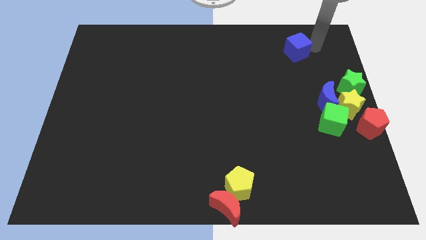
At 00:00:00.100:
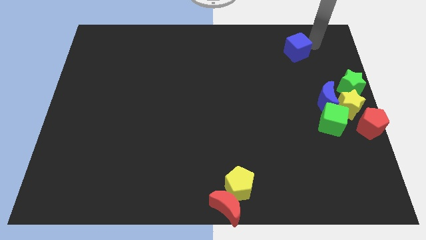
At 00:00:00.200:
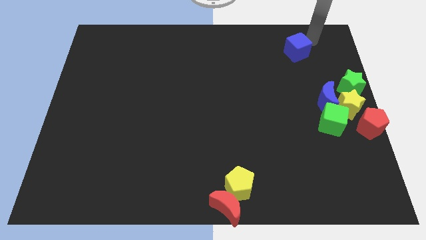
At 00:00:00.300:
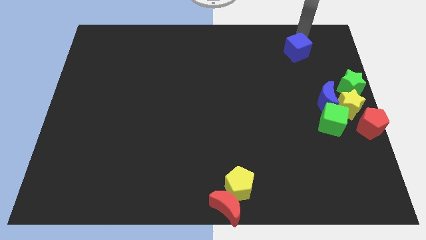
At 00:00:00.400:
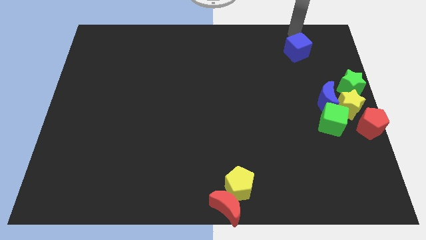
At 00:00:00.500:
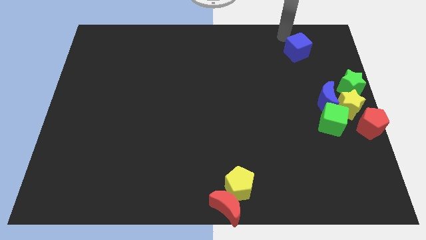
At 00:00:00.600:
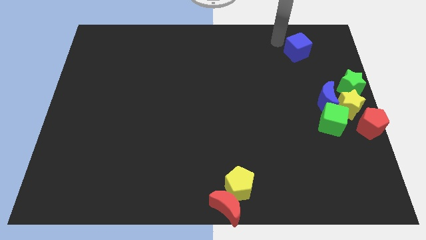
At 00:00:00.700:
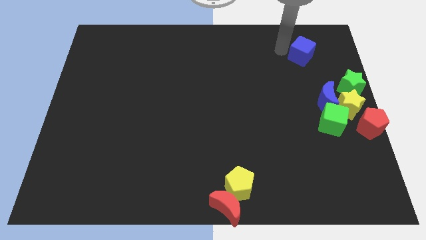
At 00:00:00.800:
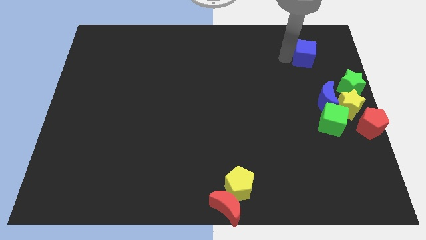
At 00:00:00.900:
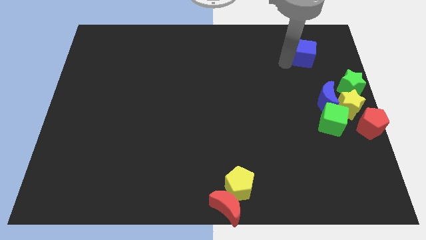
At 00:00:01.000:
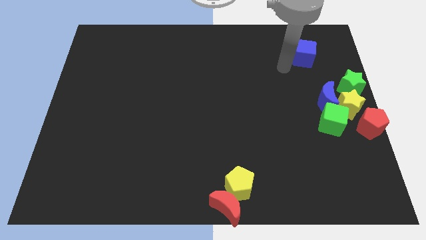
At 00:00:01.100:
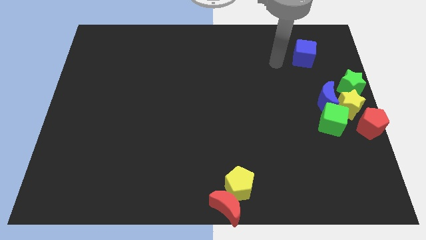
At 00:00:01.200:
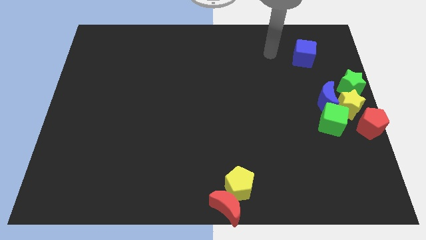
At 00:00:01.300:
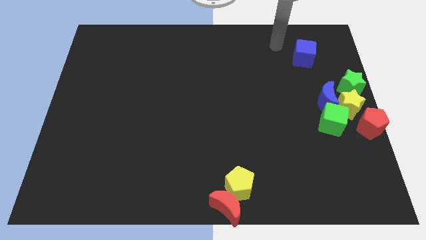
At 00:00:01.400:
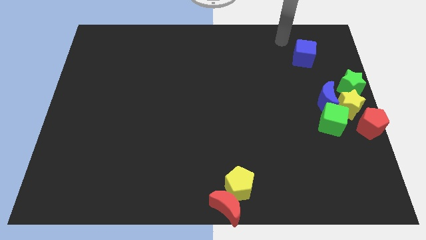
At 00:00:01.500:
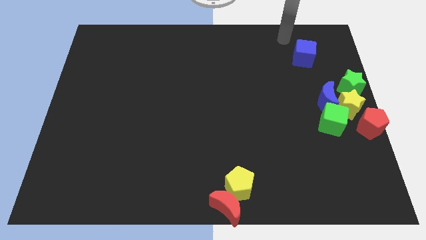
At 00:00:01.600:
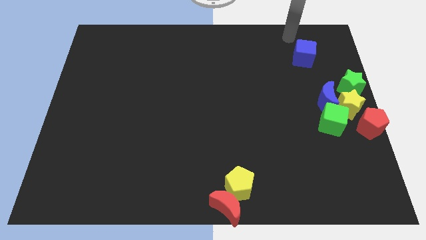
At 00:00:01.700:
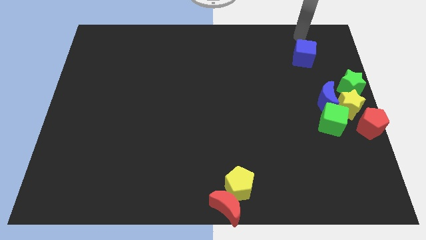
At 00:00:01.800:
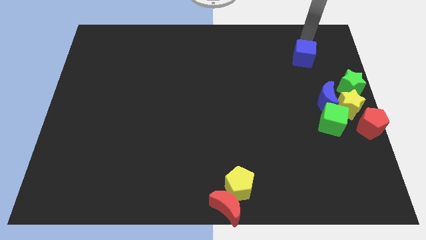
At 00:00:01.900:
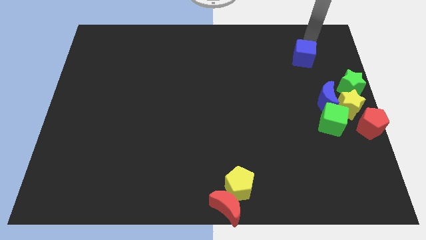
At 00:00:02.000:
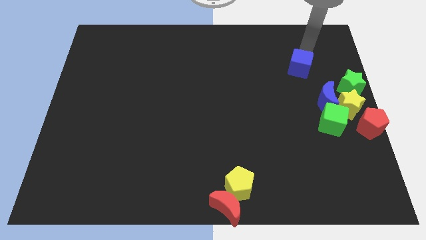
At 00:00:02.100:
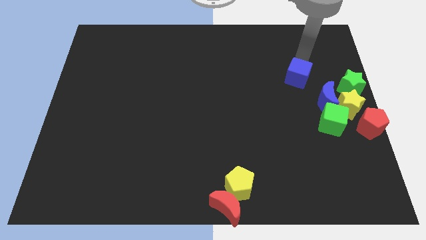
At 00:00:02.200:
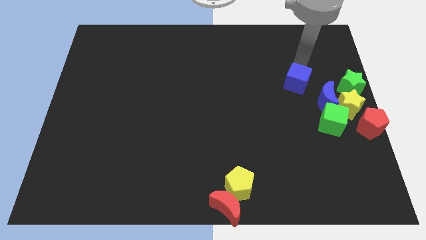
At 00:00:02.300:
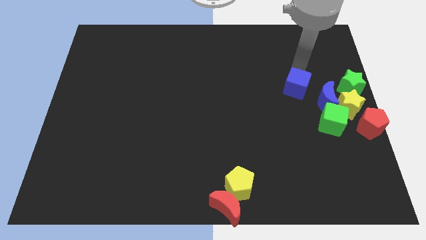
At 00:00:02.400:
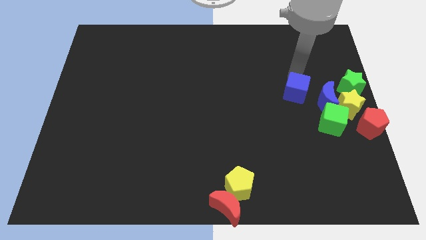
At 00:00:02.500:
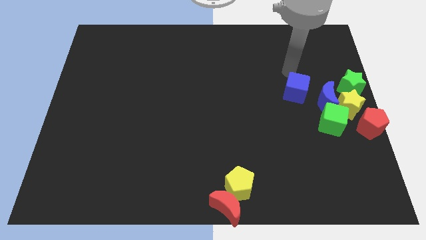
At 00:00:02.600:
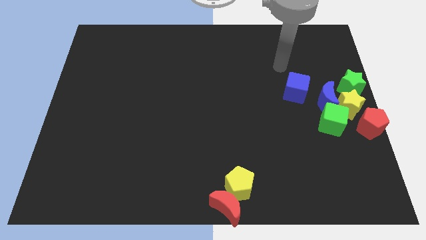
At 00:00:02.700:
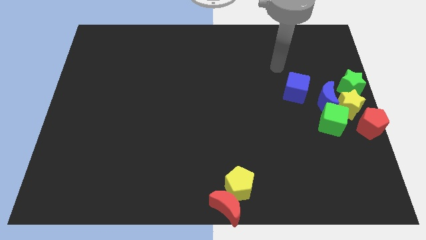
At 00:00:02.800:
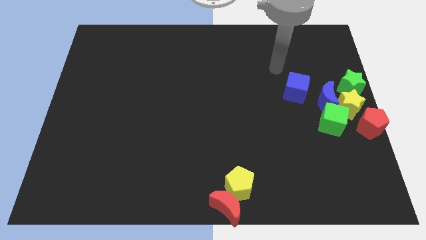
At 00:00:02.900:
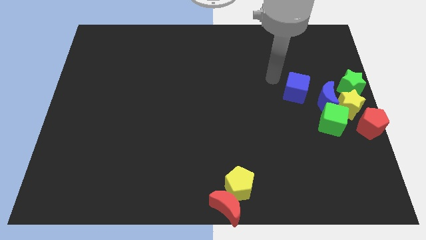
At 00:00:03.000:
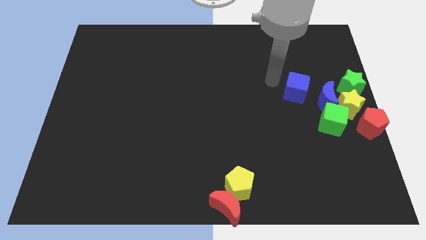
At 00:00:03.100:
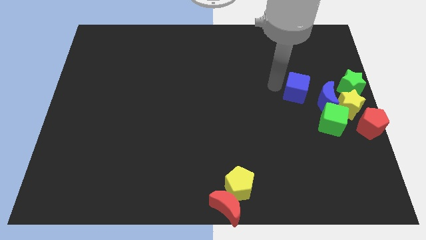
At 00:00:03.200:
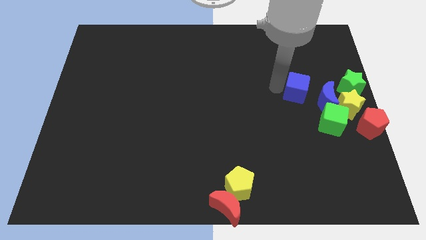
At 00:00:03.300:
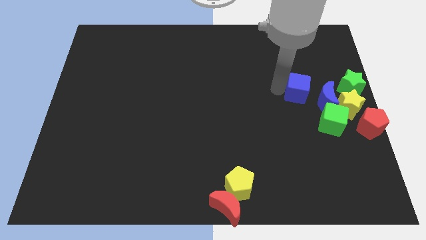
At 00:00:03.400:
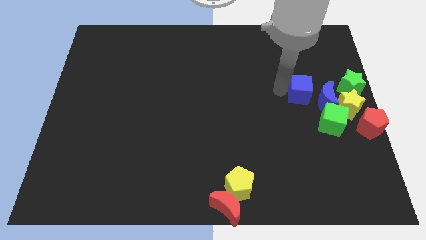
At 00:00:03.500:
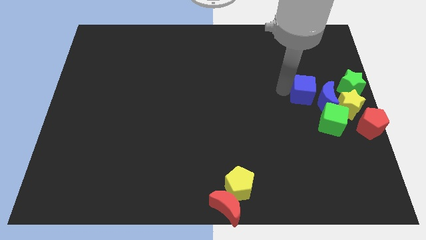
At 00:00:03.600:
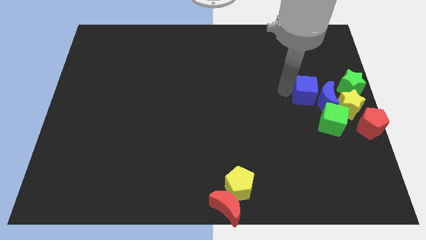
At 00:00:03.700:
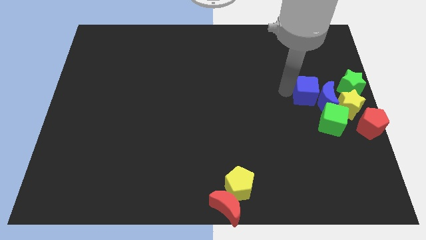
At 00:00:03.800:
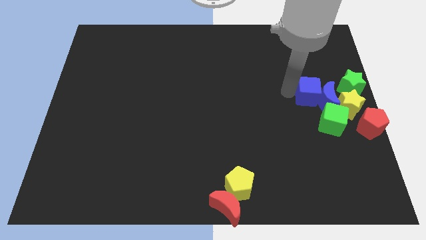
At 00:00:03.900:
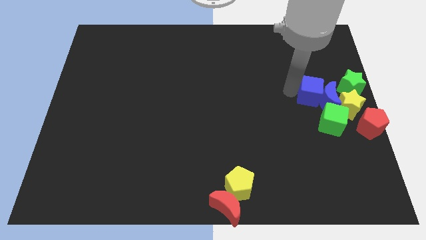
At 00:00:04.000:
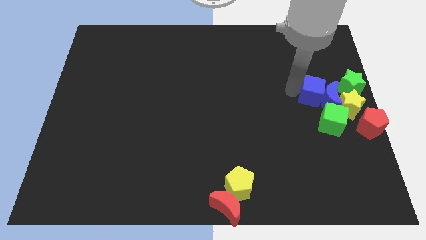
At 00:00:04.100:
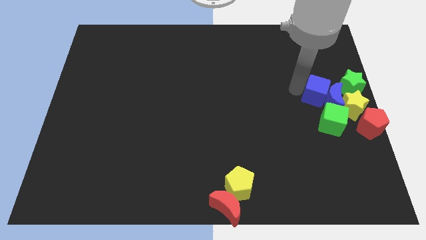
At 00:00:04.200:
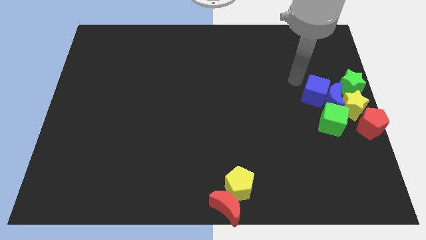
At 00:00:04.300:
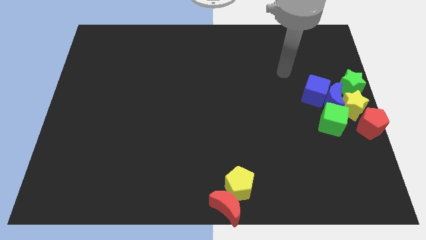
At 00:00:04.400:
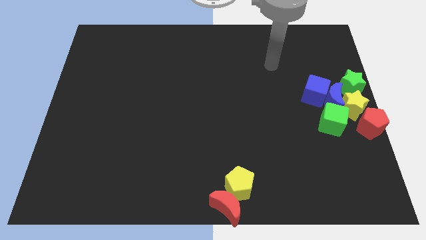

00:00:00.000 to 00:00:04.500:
push the blue cube to the left side of the blue moon

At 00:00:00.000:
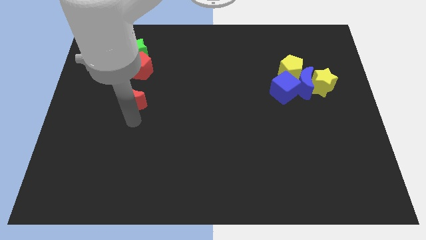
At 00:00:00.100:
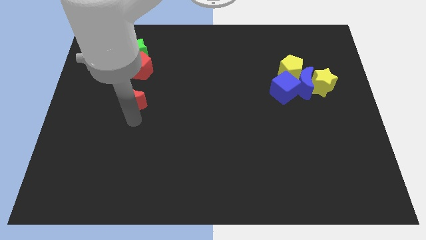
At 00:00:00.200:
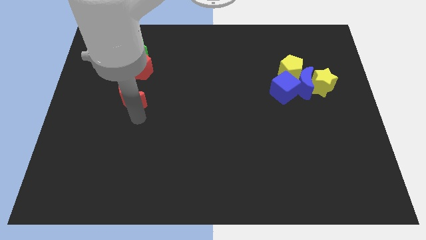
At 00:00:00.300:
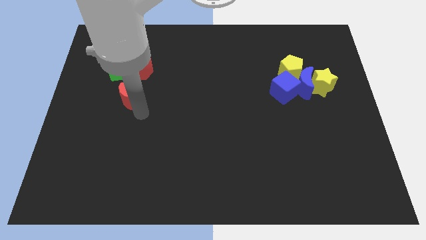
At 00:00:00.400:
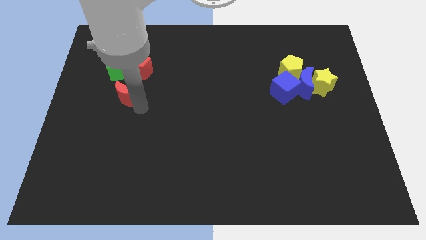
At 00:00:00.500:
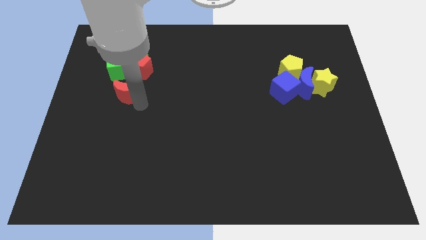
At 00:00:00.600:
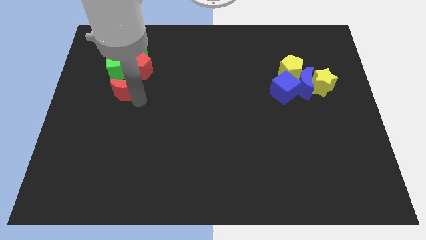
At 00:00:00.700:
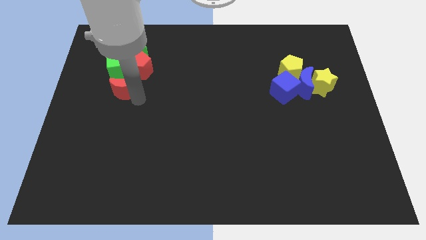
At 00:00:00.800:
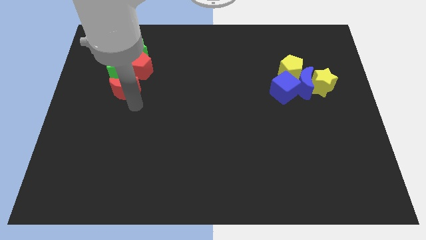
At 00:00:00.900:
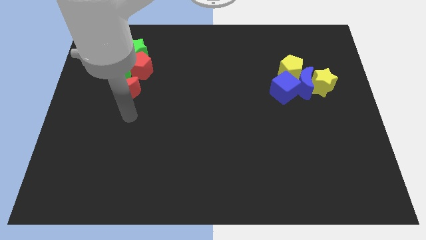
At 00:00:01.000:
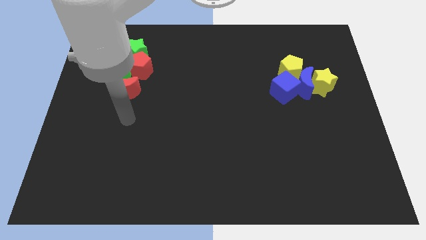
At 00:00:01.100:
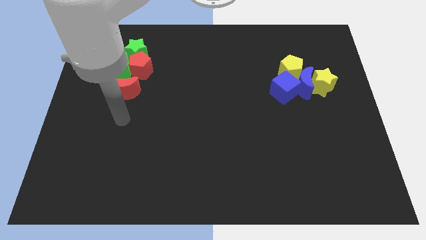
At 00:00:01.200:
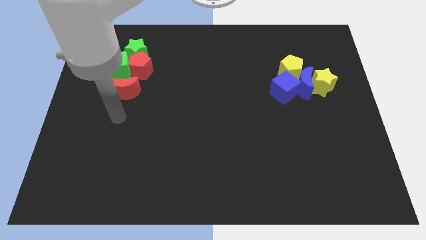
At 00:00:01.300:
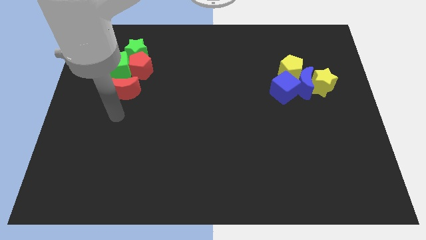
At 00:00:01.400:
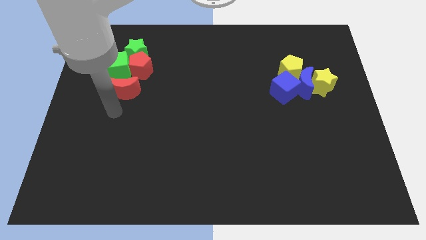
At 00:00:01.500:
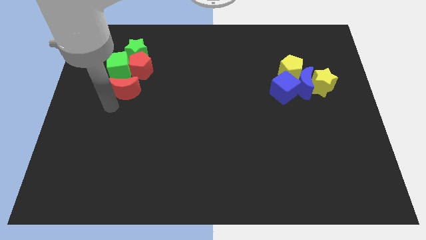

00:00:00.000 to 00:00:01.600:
place the red crescent at the bottom of green cube

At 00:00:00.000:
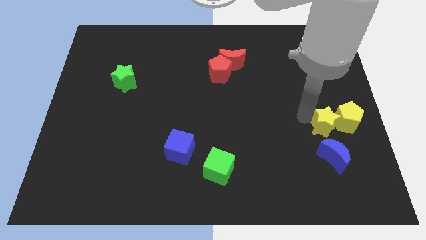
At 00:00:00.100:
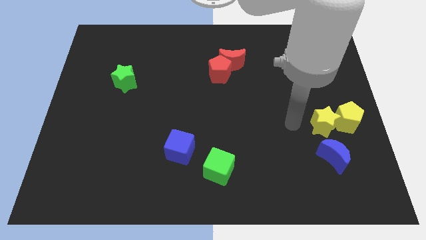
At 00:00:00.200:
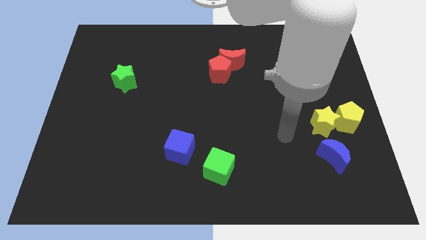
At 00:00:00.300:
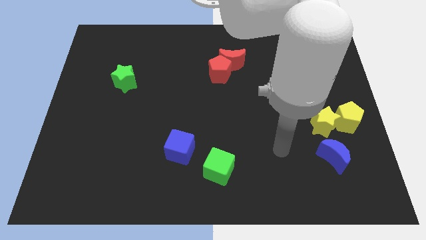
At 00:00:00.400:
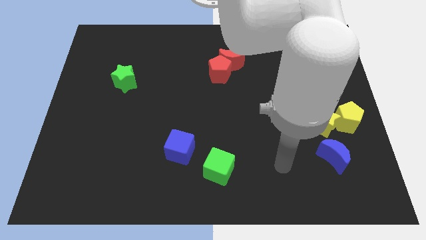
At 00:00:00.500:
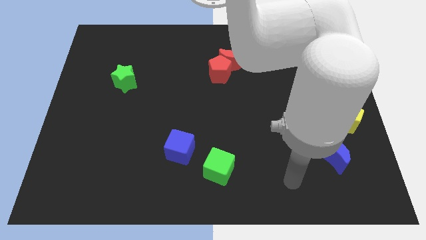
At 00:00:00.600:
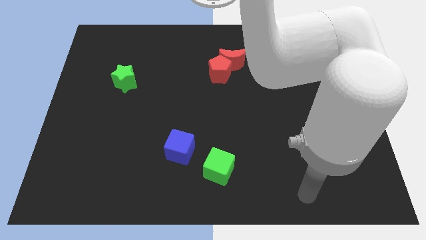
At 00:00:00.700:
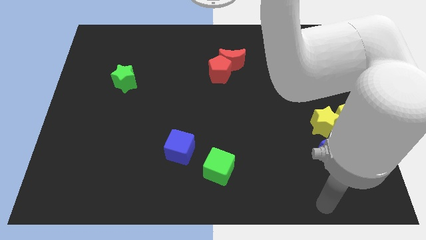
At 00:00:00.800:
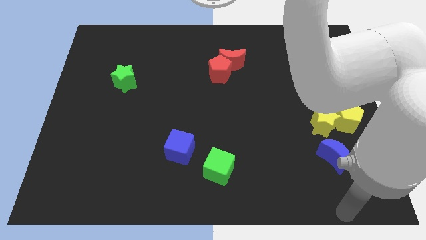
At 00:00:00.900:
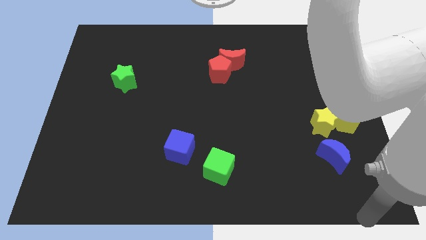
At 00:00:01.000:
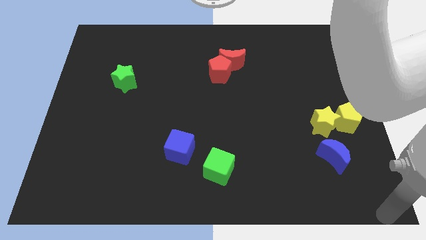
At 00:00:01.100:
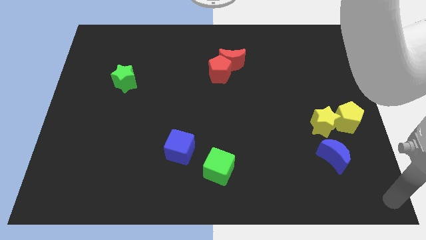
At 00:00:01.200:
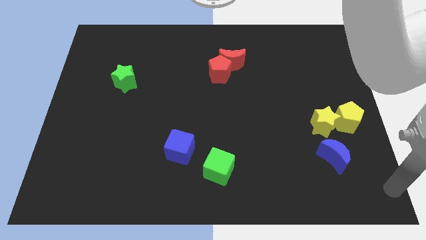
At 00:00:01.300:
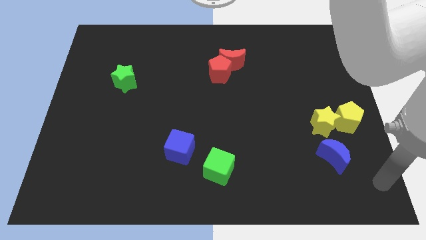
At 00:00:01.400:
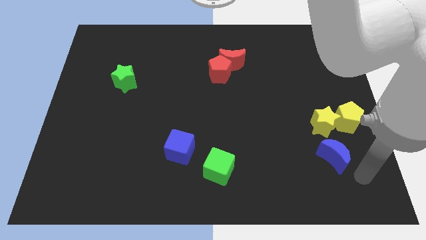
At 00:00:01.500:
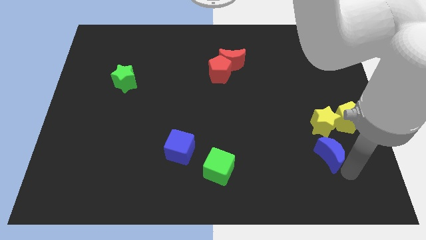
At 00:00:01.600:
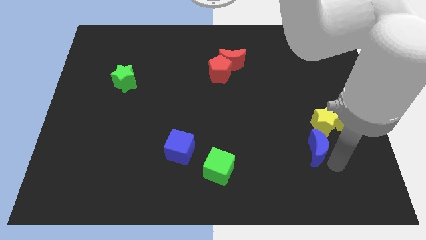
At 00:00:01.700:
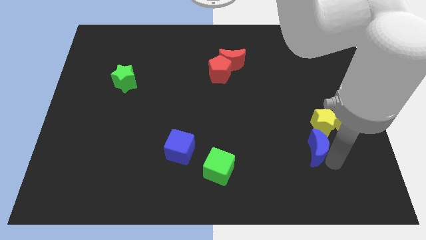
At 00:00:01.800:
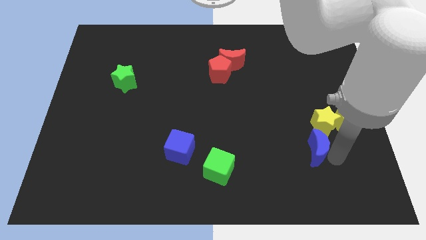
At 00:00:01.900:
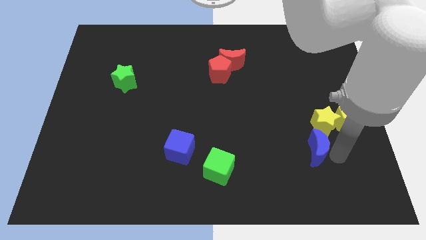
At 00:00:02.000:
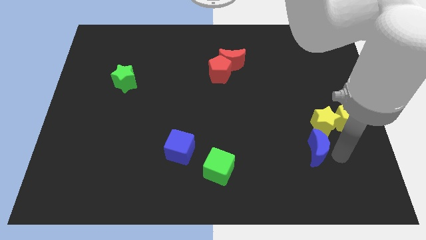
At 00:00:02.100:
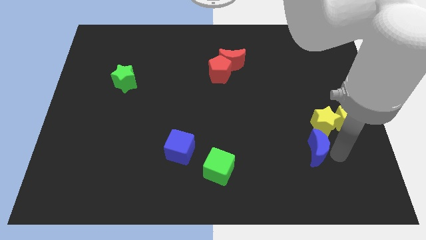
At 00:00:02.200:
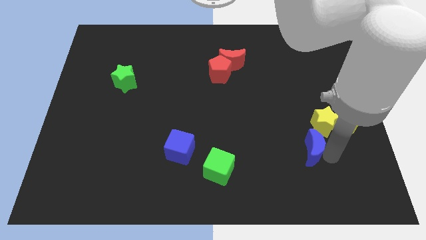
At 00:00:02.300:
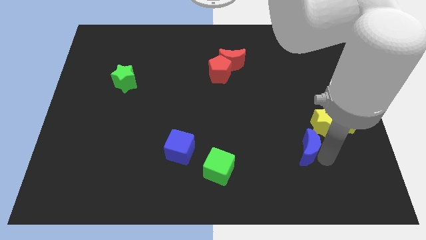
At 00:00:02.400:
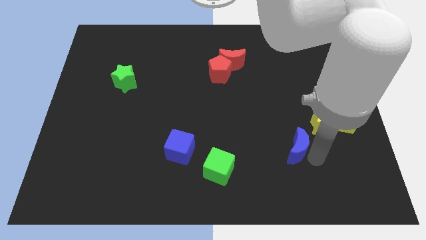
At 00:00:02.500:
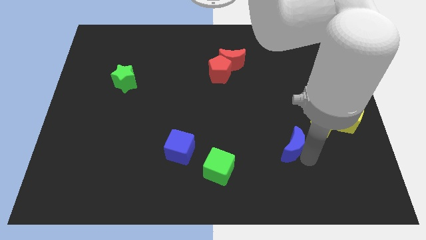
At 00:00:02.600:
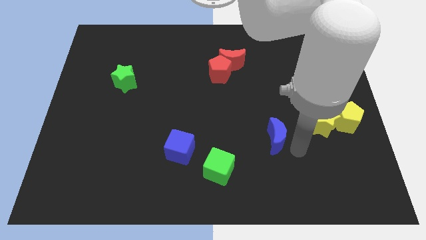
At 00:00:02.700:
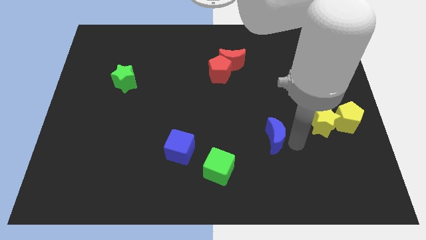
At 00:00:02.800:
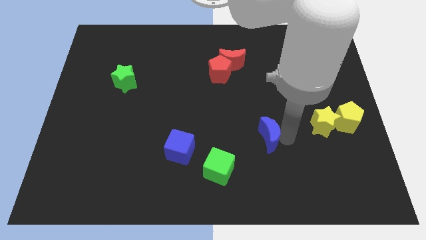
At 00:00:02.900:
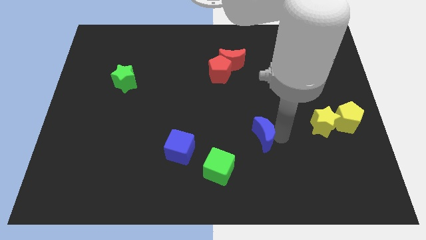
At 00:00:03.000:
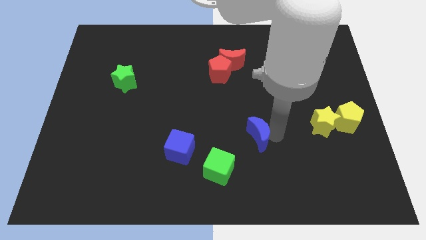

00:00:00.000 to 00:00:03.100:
slide the blue moon diagonally to bottom left of yellow star
